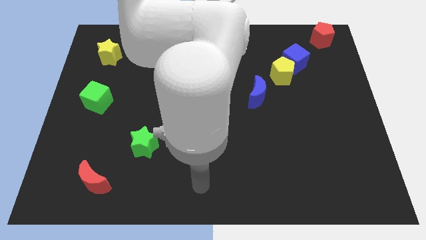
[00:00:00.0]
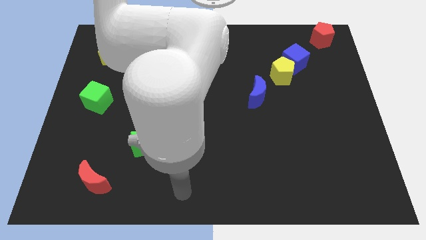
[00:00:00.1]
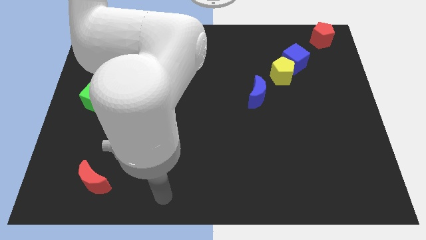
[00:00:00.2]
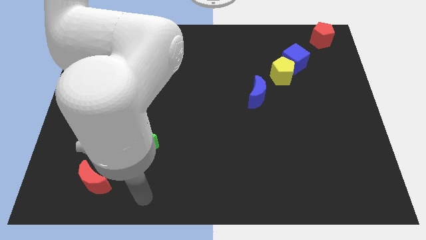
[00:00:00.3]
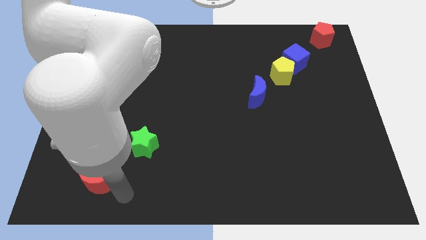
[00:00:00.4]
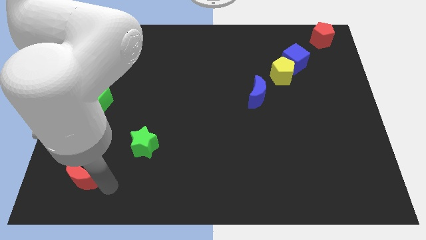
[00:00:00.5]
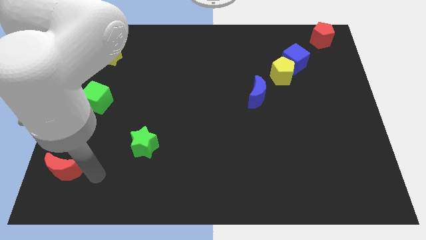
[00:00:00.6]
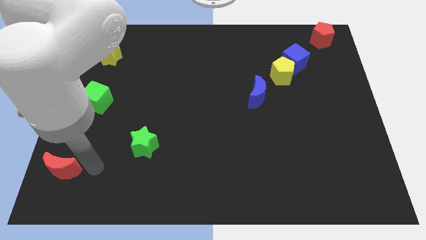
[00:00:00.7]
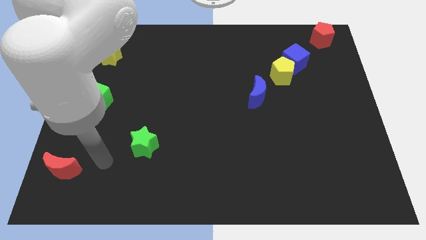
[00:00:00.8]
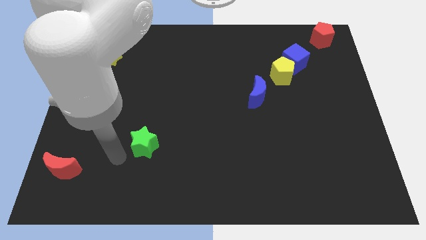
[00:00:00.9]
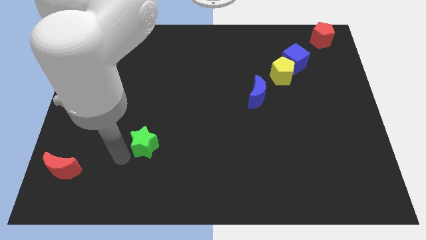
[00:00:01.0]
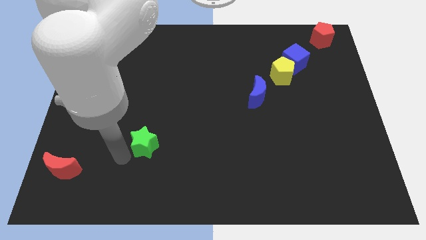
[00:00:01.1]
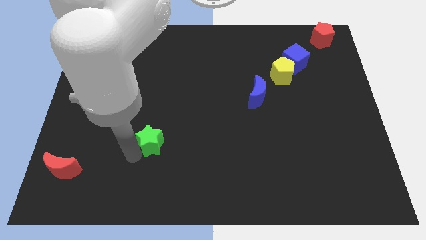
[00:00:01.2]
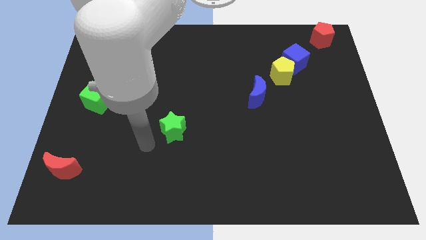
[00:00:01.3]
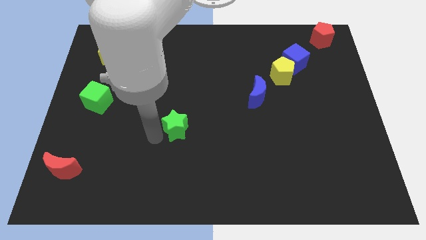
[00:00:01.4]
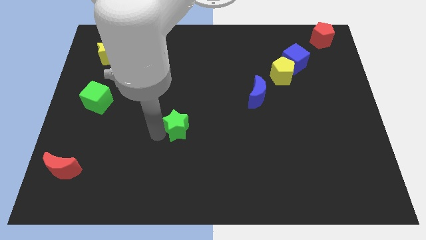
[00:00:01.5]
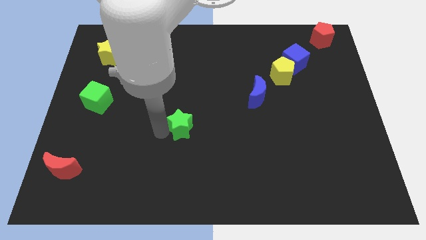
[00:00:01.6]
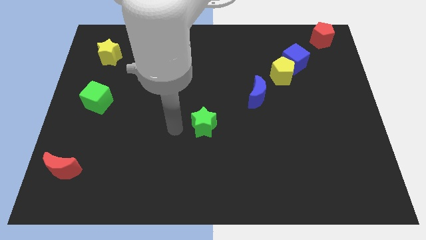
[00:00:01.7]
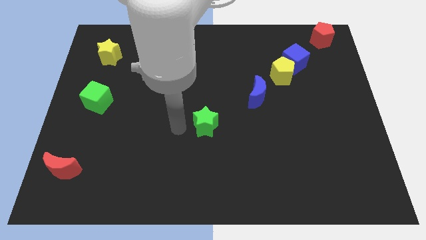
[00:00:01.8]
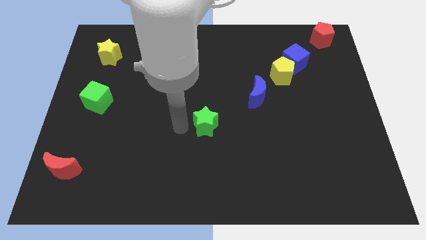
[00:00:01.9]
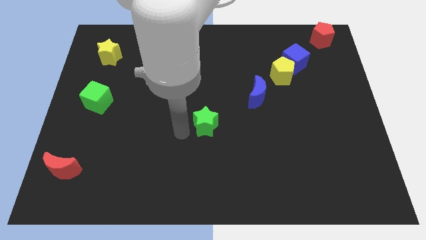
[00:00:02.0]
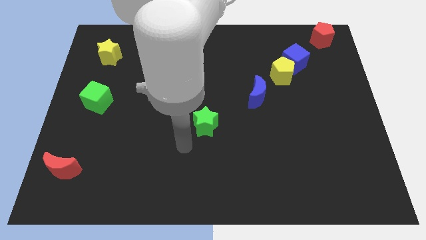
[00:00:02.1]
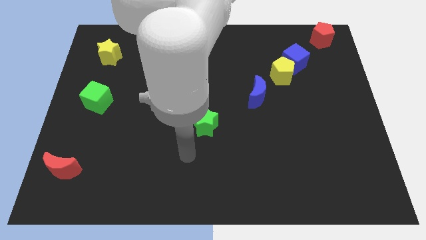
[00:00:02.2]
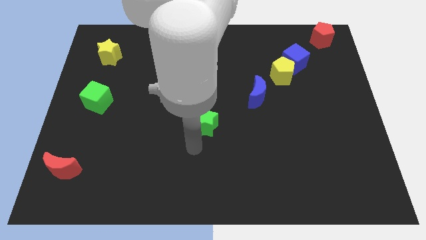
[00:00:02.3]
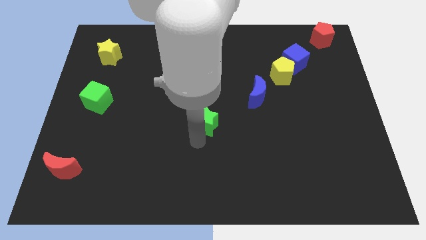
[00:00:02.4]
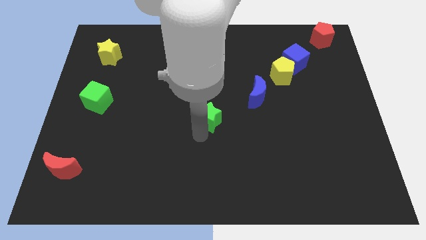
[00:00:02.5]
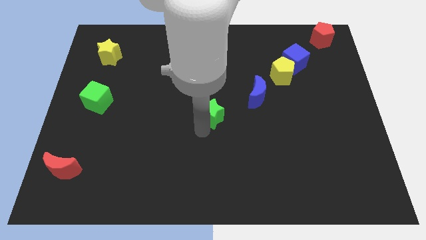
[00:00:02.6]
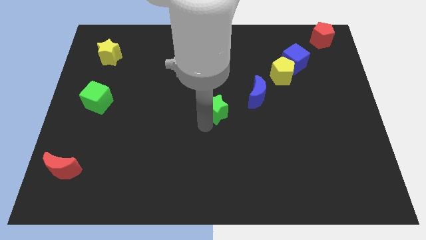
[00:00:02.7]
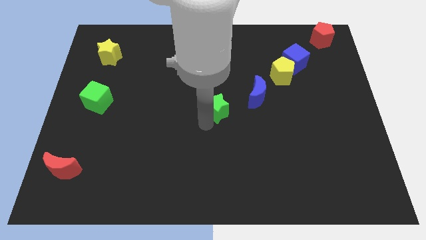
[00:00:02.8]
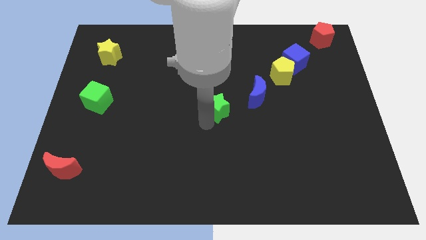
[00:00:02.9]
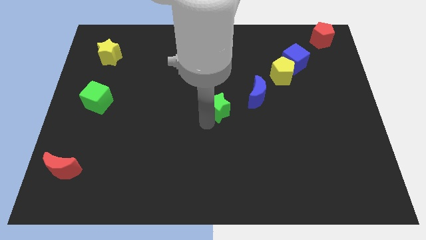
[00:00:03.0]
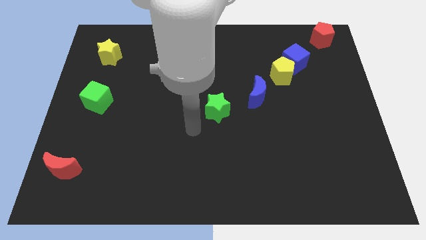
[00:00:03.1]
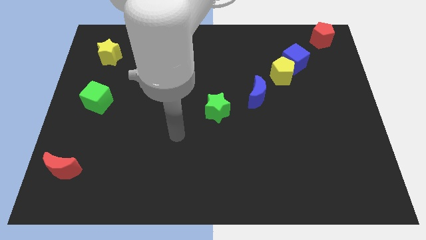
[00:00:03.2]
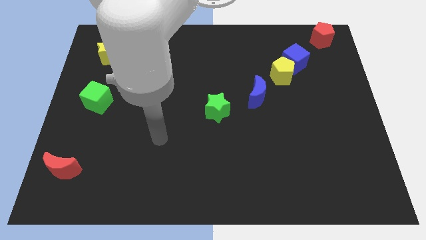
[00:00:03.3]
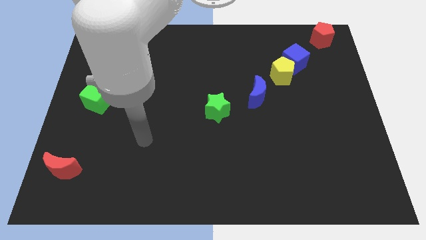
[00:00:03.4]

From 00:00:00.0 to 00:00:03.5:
move the green star center of the board

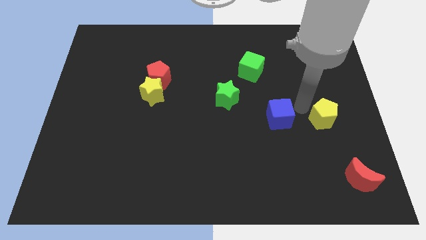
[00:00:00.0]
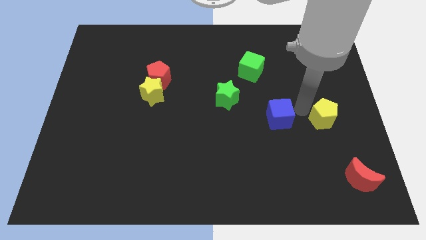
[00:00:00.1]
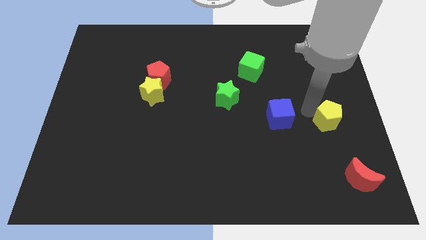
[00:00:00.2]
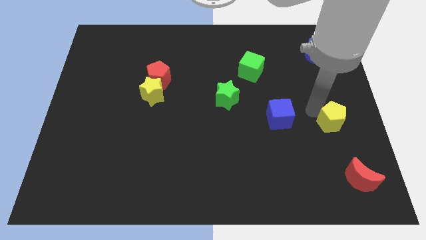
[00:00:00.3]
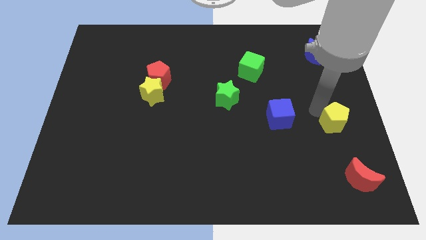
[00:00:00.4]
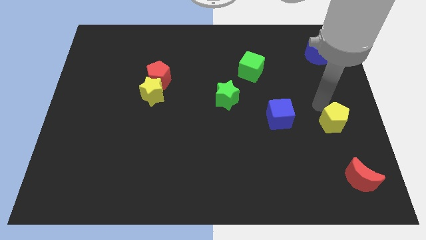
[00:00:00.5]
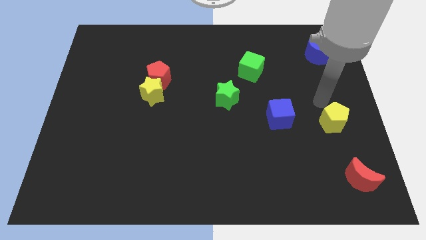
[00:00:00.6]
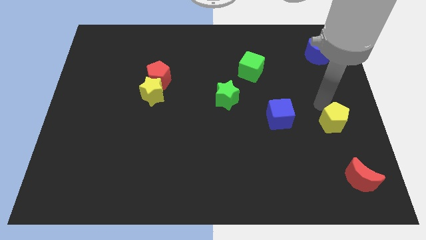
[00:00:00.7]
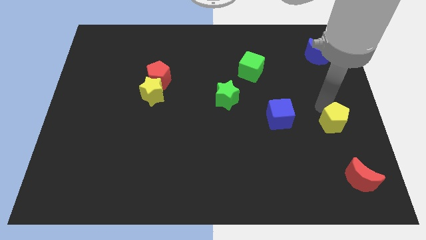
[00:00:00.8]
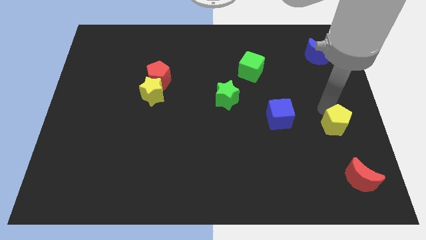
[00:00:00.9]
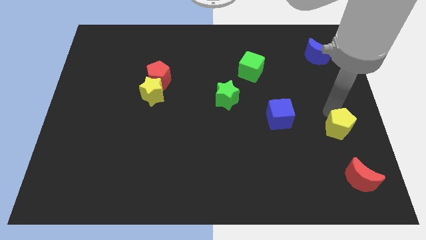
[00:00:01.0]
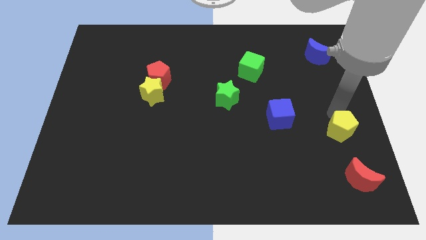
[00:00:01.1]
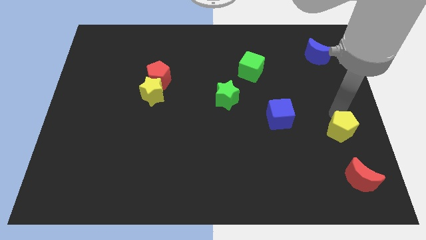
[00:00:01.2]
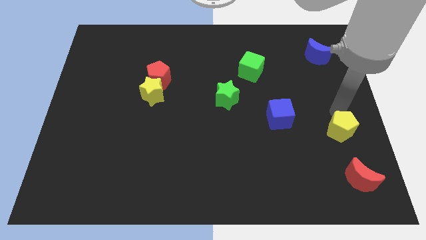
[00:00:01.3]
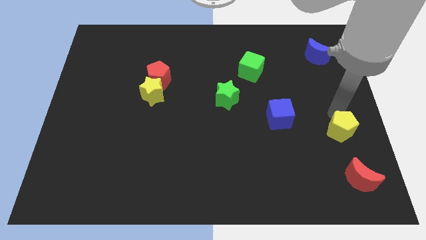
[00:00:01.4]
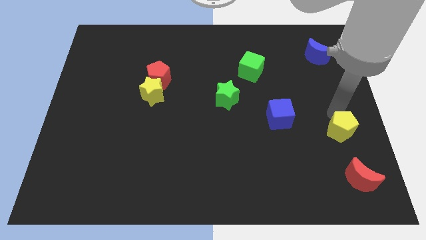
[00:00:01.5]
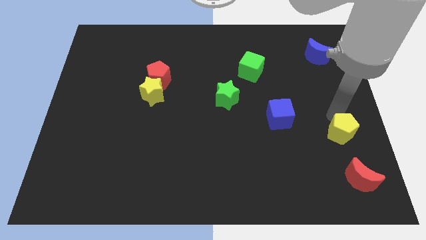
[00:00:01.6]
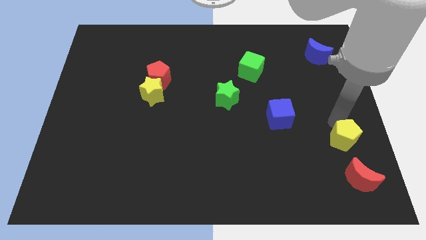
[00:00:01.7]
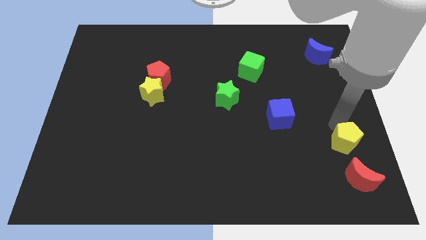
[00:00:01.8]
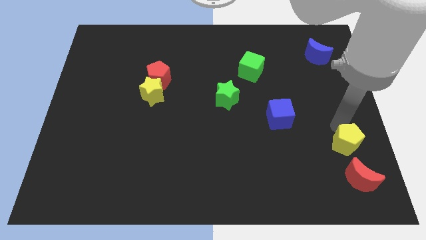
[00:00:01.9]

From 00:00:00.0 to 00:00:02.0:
push the yellow pentagon to the top of the red crescent

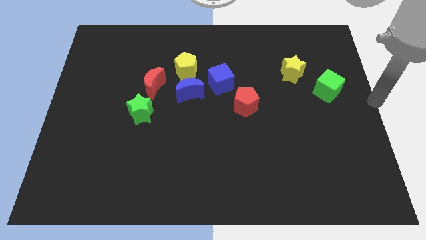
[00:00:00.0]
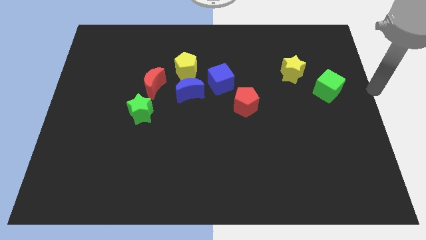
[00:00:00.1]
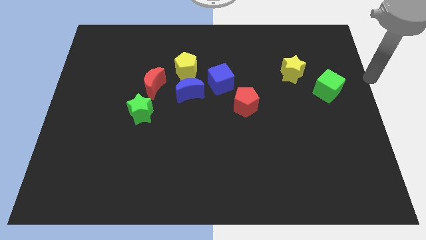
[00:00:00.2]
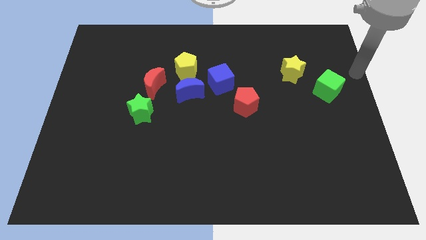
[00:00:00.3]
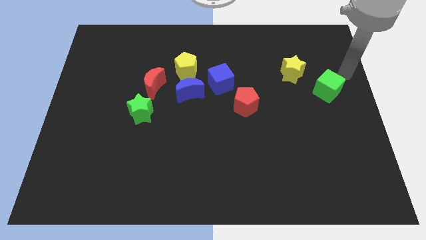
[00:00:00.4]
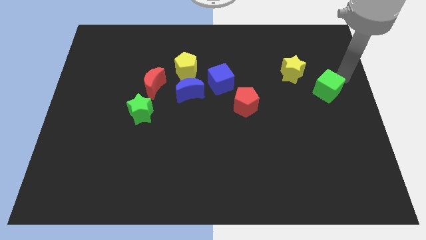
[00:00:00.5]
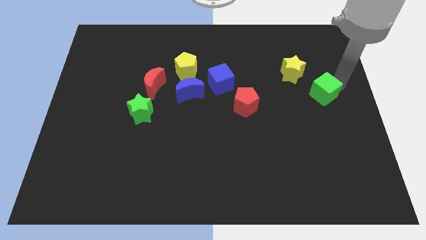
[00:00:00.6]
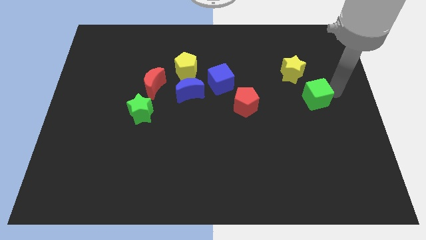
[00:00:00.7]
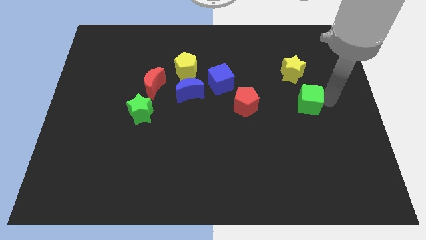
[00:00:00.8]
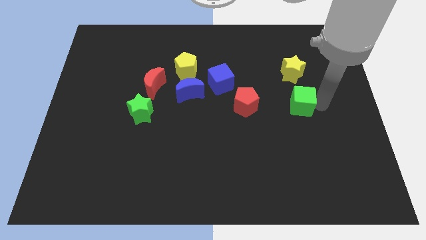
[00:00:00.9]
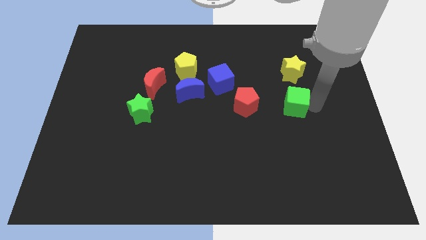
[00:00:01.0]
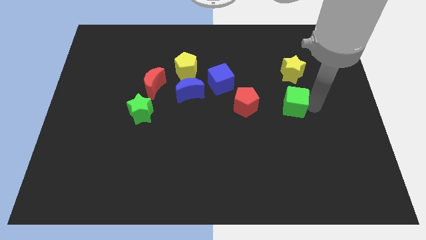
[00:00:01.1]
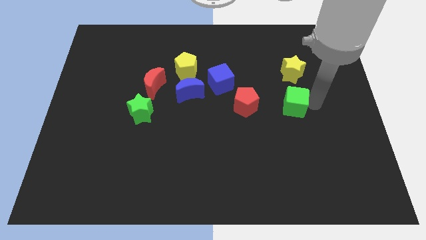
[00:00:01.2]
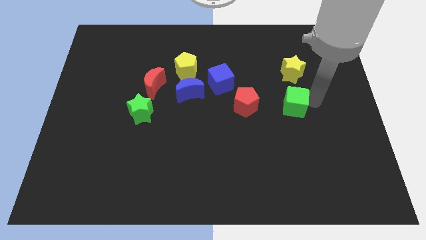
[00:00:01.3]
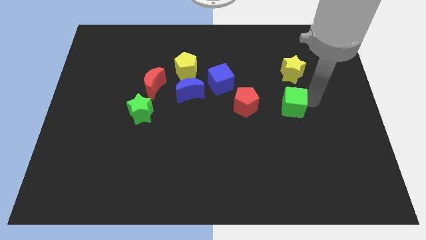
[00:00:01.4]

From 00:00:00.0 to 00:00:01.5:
push the green cube to the bottom of the yellow star

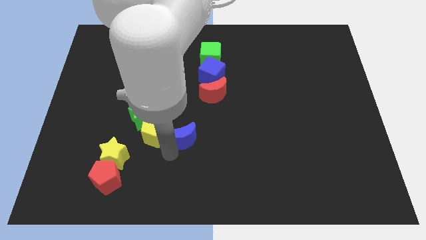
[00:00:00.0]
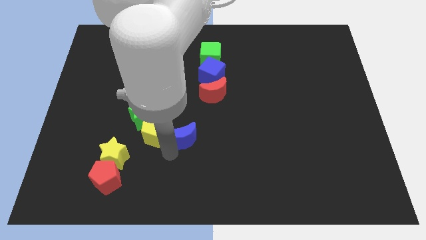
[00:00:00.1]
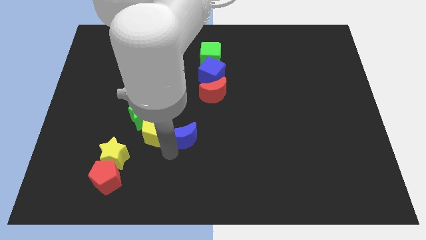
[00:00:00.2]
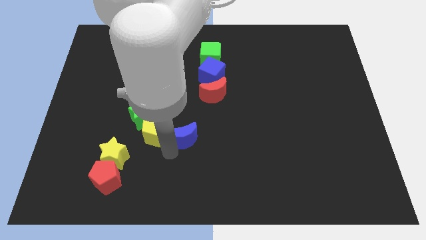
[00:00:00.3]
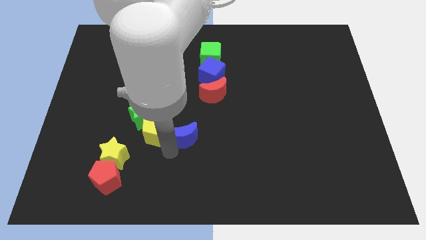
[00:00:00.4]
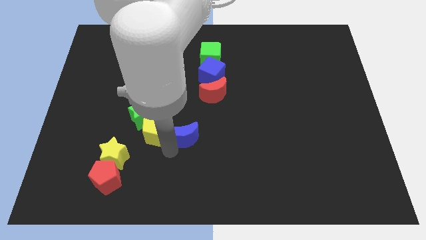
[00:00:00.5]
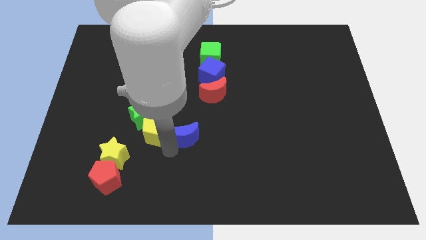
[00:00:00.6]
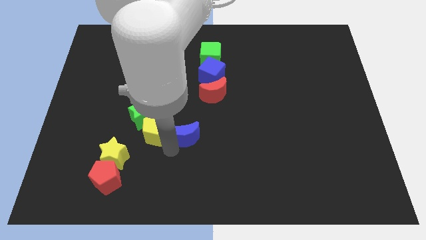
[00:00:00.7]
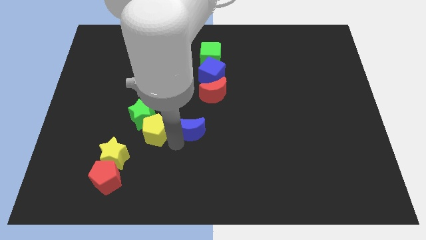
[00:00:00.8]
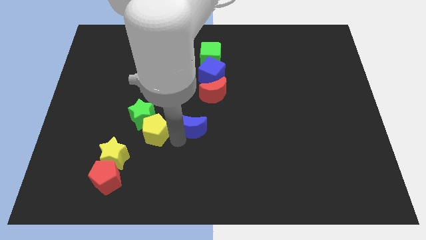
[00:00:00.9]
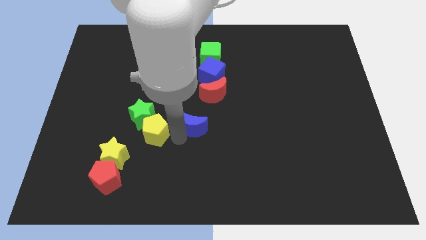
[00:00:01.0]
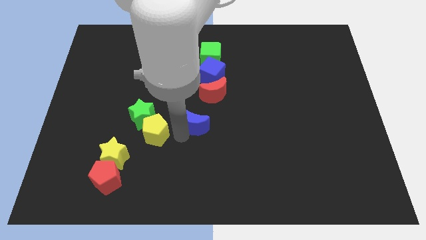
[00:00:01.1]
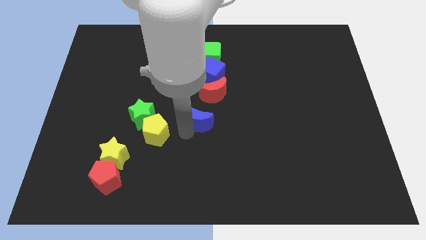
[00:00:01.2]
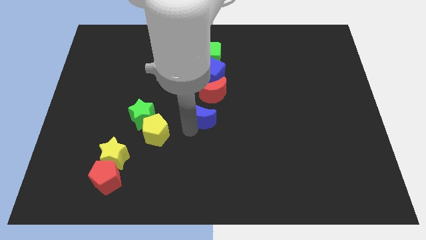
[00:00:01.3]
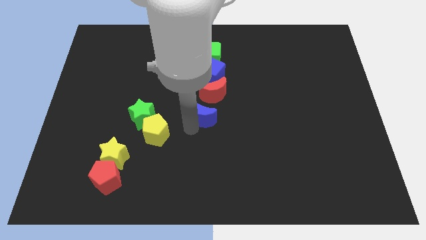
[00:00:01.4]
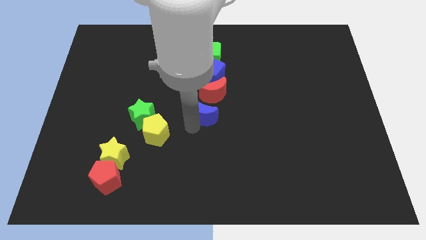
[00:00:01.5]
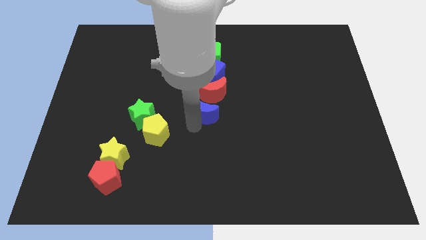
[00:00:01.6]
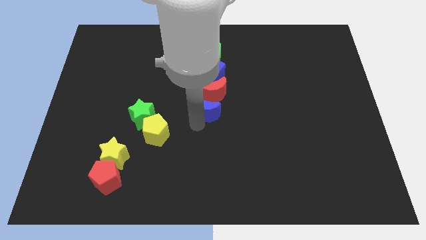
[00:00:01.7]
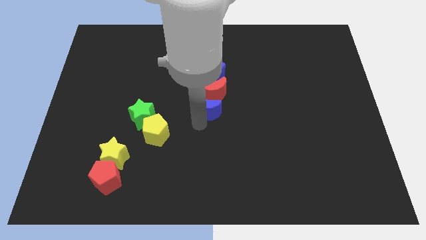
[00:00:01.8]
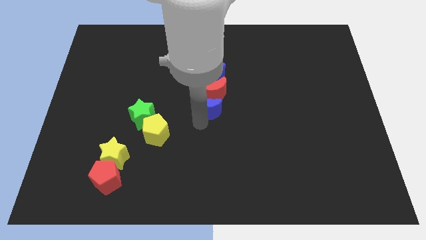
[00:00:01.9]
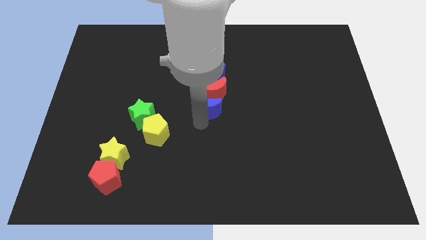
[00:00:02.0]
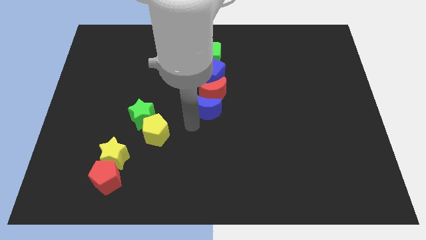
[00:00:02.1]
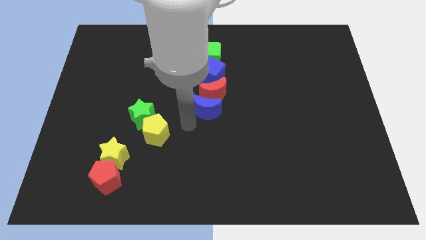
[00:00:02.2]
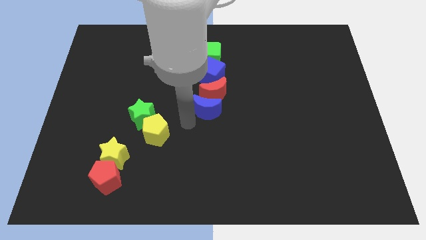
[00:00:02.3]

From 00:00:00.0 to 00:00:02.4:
move blue crescent into red crescent
